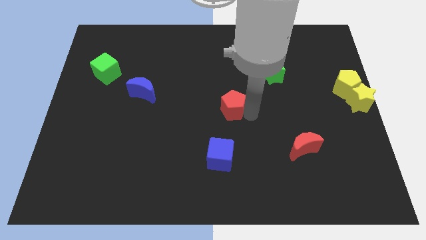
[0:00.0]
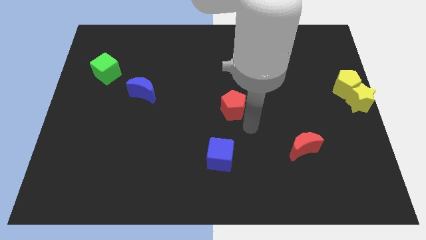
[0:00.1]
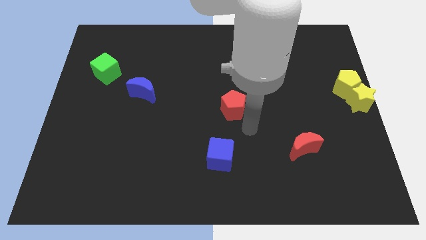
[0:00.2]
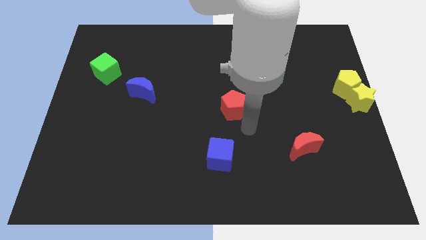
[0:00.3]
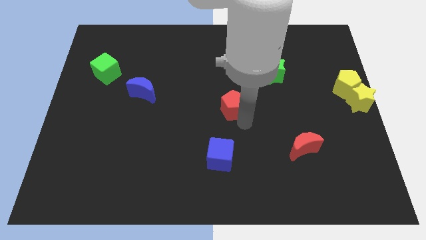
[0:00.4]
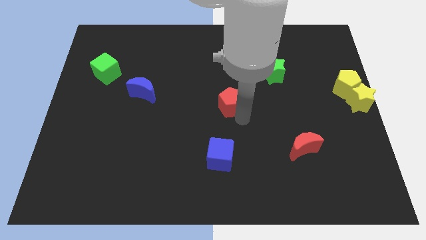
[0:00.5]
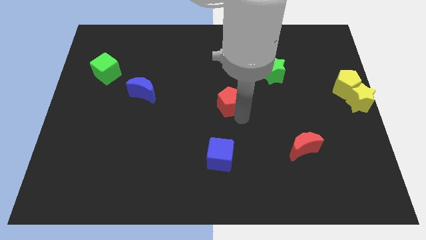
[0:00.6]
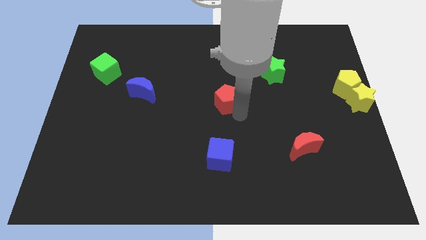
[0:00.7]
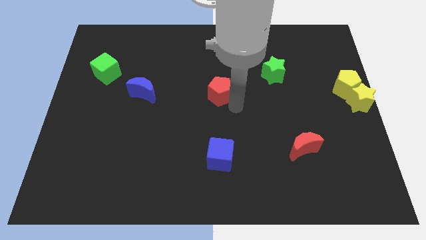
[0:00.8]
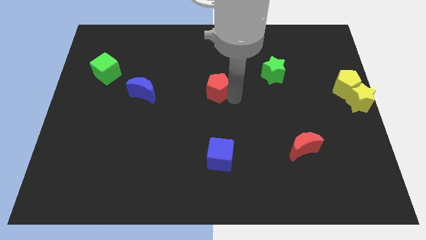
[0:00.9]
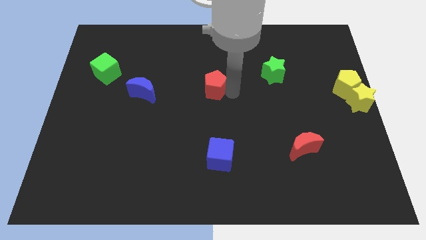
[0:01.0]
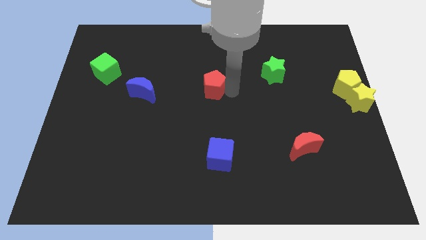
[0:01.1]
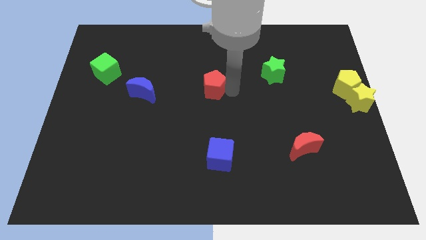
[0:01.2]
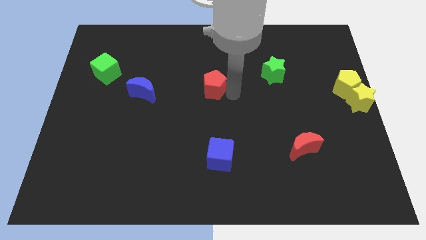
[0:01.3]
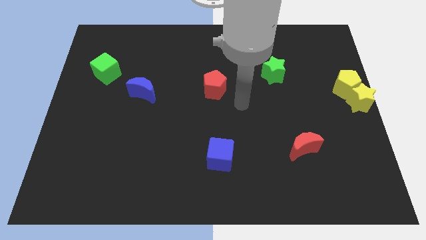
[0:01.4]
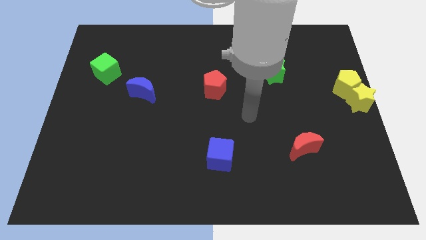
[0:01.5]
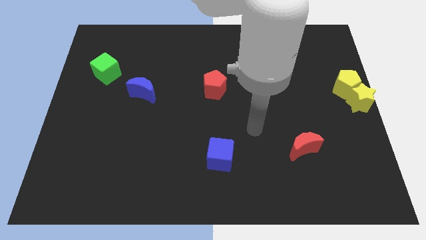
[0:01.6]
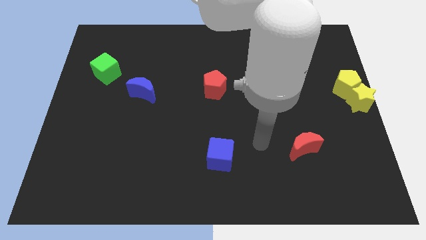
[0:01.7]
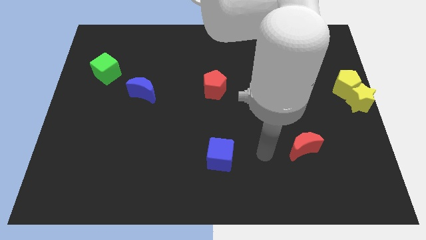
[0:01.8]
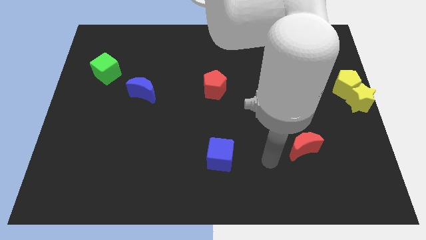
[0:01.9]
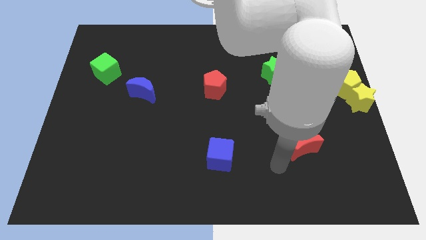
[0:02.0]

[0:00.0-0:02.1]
drag red pentagon to the right of blue moon

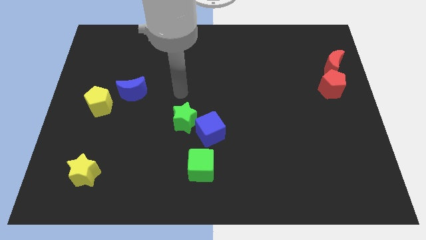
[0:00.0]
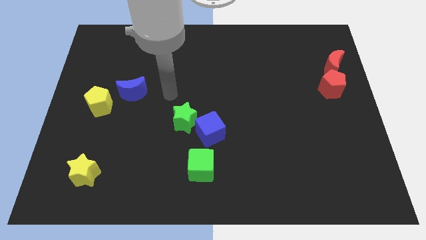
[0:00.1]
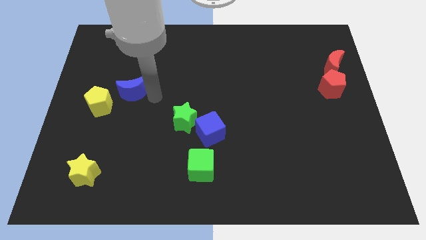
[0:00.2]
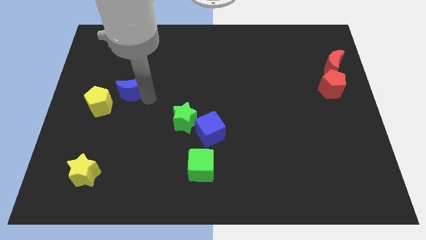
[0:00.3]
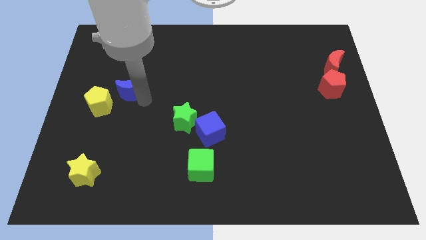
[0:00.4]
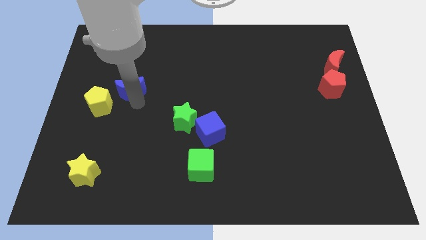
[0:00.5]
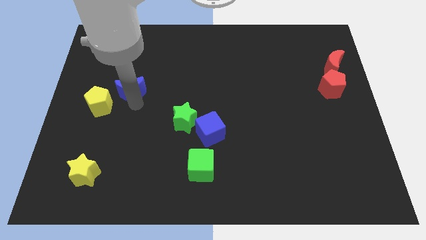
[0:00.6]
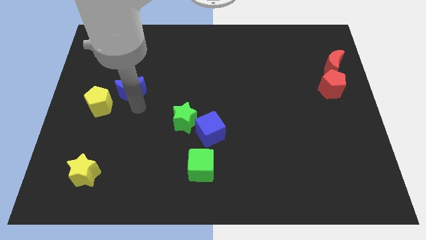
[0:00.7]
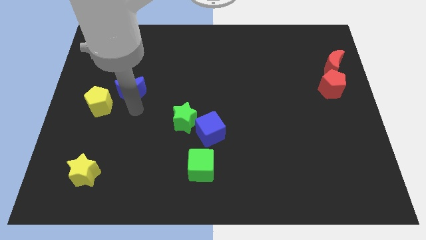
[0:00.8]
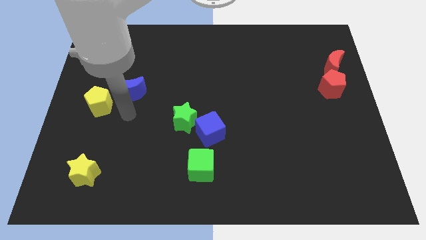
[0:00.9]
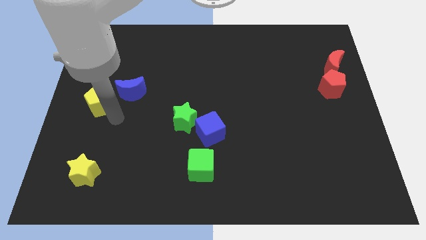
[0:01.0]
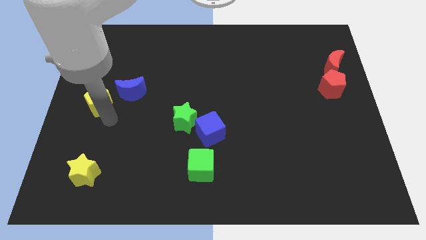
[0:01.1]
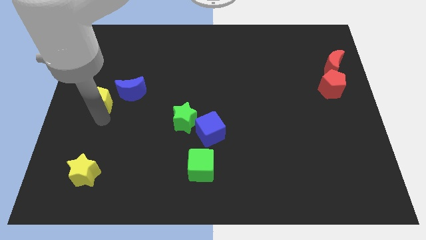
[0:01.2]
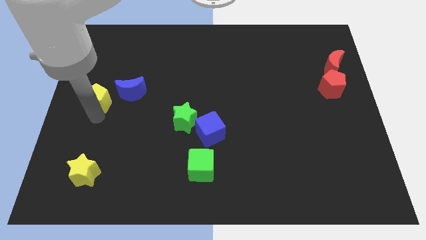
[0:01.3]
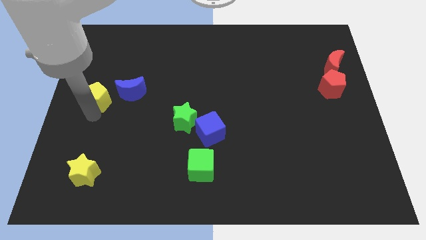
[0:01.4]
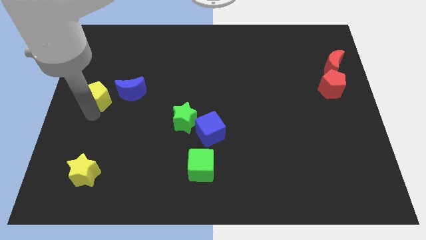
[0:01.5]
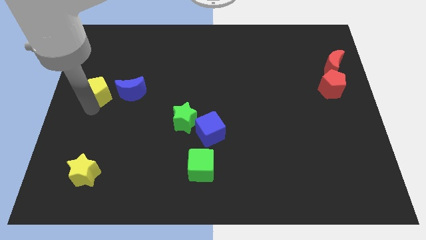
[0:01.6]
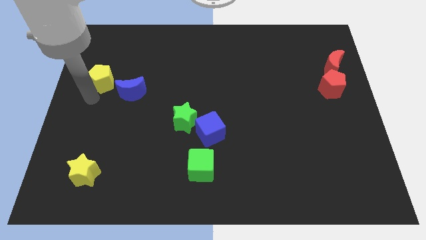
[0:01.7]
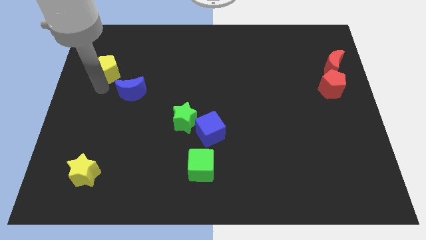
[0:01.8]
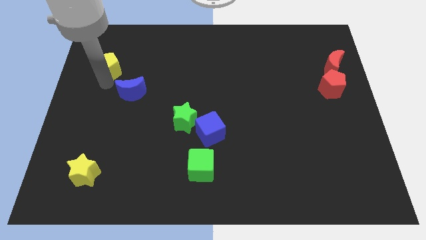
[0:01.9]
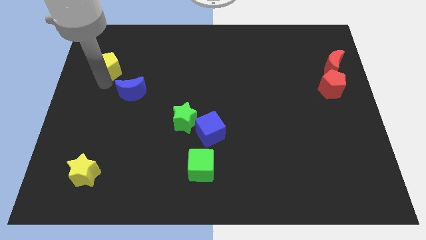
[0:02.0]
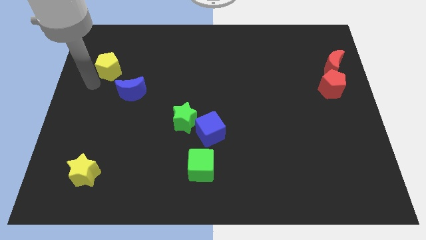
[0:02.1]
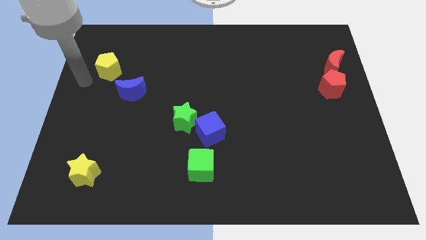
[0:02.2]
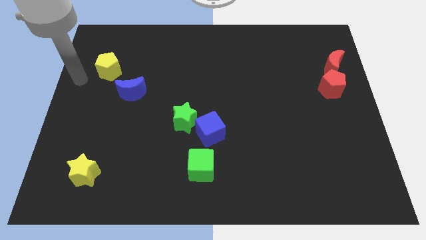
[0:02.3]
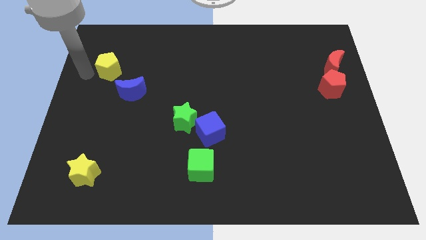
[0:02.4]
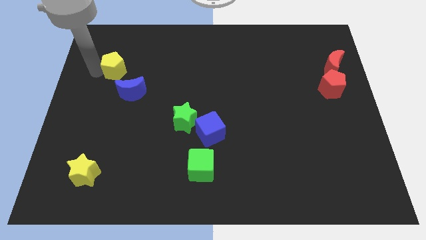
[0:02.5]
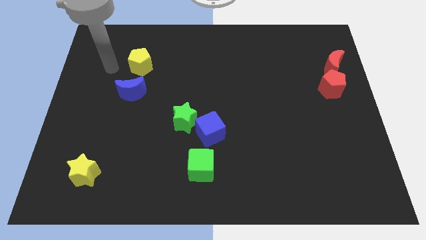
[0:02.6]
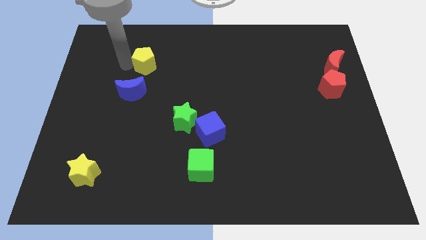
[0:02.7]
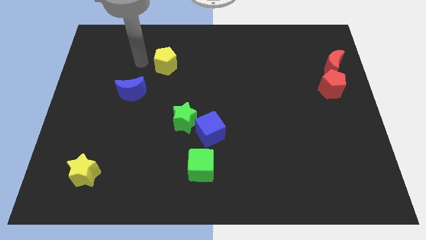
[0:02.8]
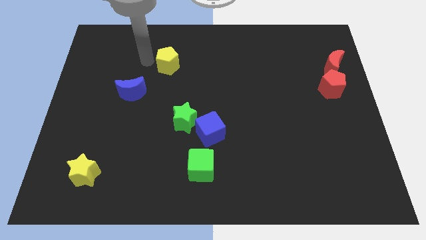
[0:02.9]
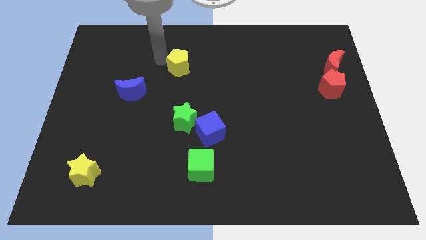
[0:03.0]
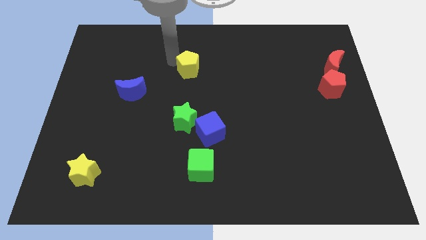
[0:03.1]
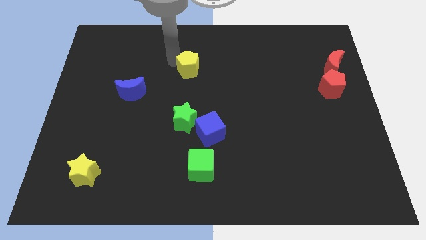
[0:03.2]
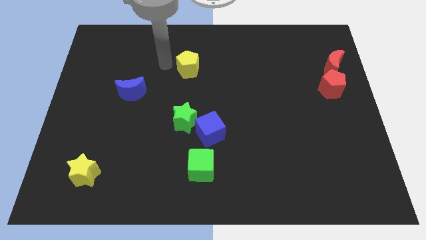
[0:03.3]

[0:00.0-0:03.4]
move yellow pentagon above the green star

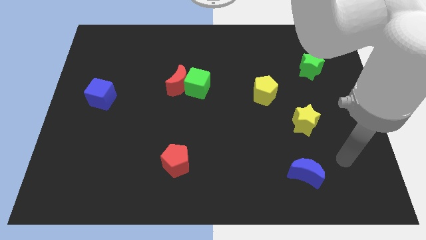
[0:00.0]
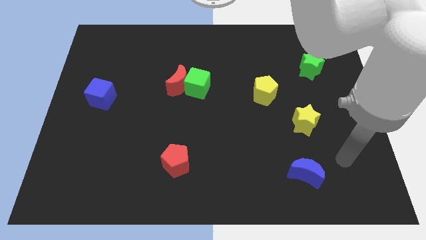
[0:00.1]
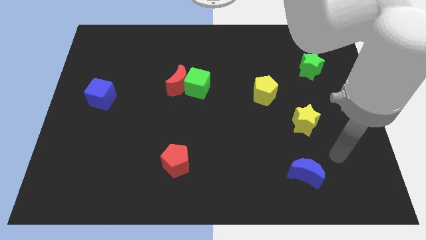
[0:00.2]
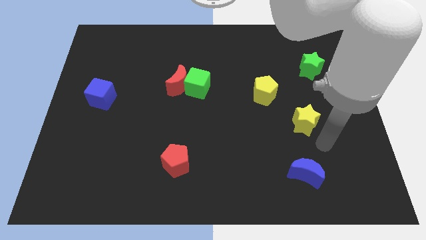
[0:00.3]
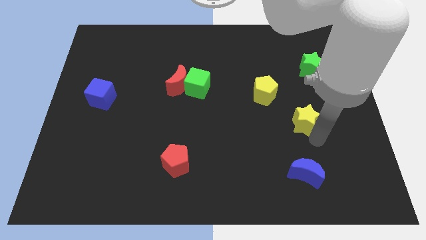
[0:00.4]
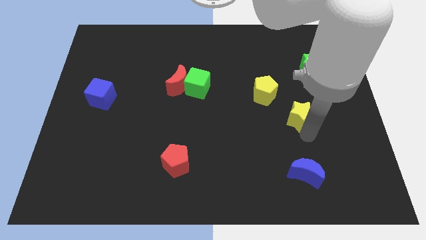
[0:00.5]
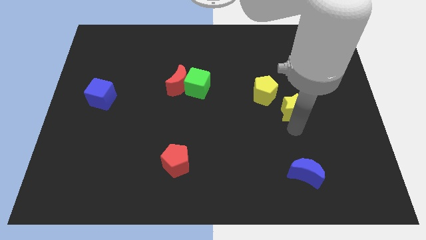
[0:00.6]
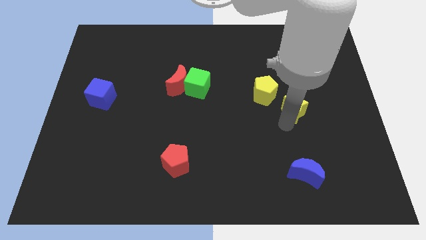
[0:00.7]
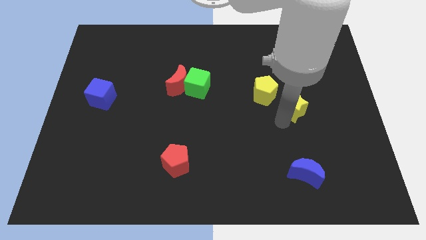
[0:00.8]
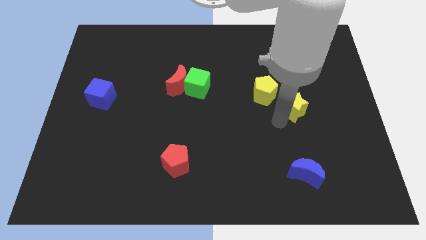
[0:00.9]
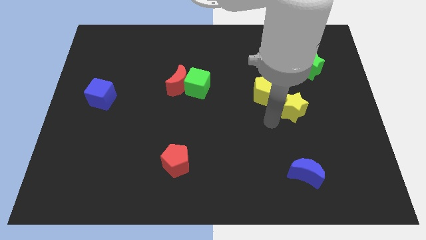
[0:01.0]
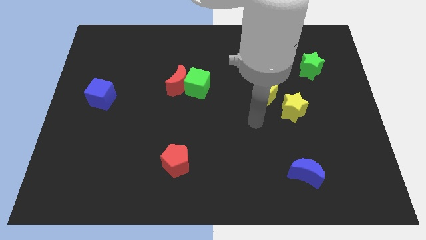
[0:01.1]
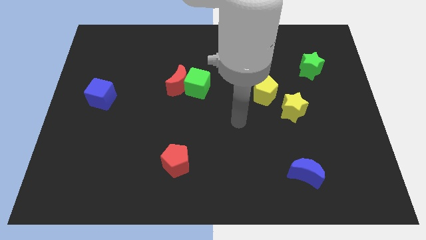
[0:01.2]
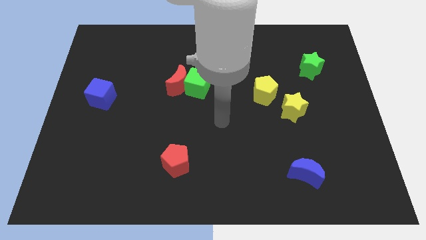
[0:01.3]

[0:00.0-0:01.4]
push the yellow star close to the yellow pentagon

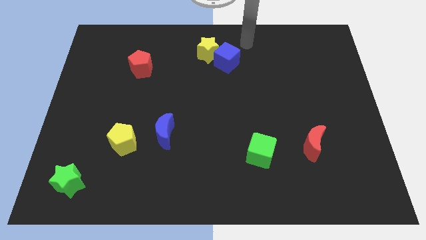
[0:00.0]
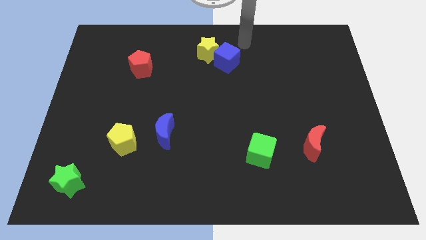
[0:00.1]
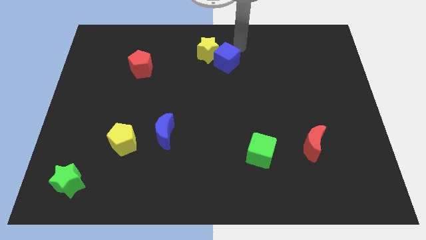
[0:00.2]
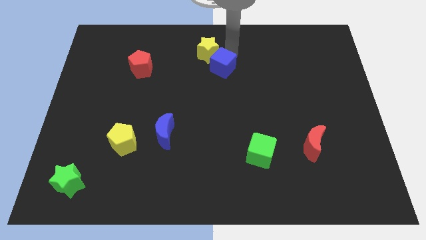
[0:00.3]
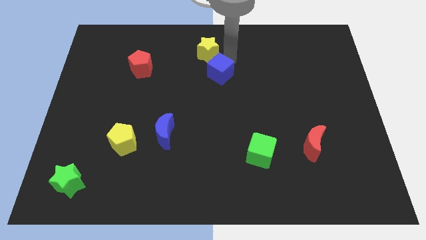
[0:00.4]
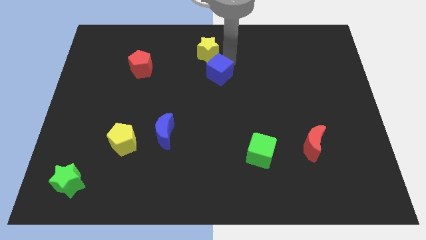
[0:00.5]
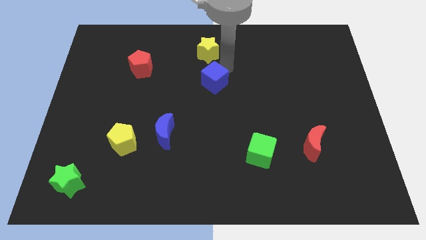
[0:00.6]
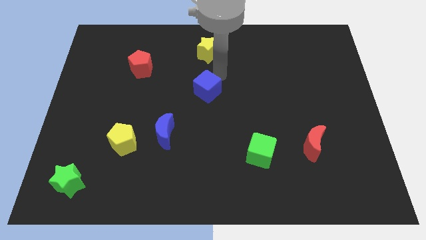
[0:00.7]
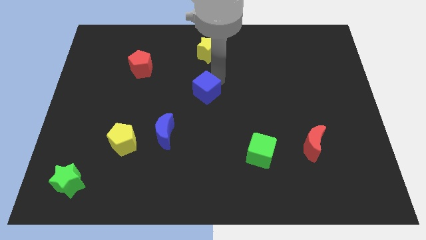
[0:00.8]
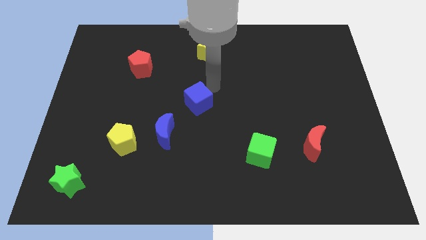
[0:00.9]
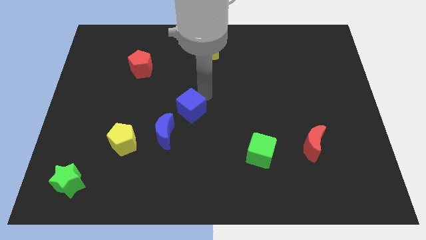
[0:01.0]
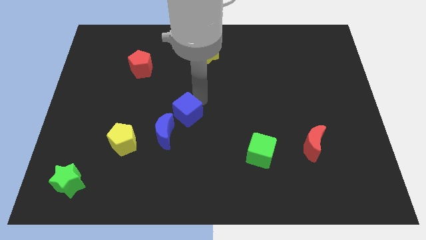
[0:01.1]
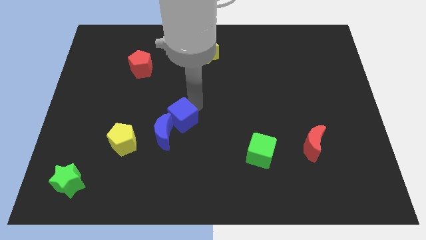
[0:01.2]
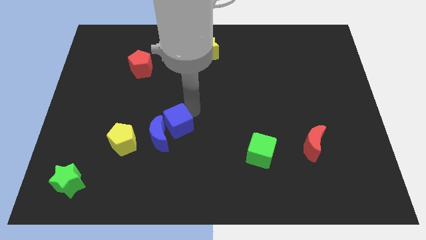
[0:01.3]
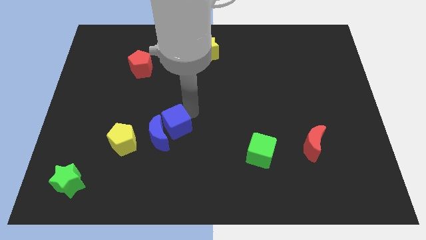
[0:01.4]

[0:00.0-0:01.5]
push the blue cube into the blue crescent

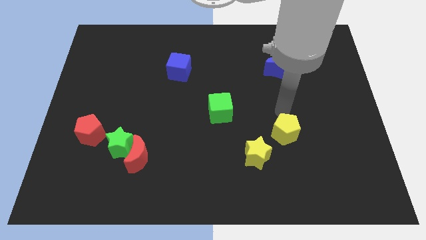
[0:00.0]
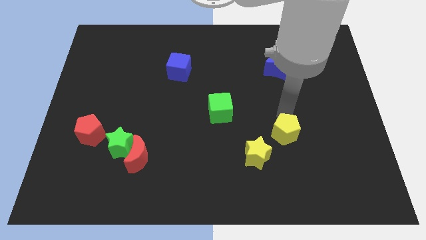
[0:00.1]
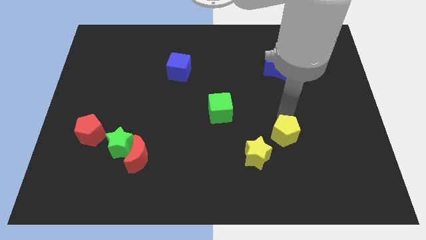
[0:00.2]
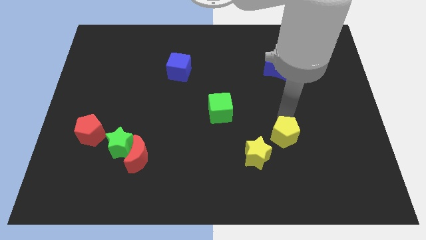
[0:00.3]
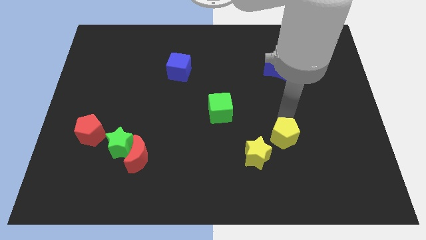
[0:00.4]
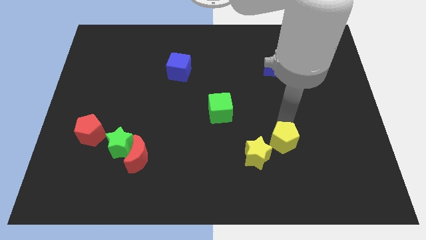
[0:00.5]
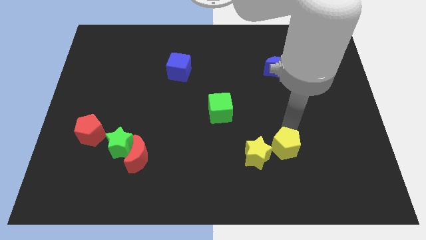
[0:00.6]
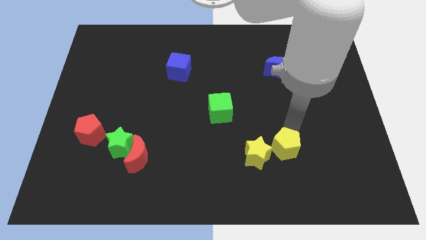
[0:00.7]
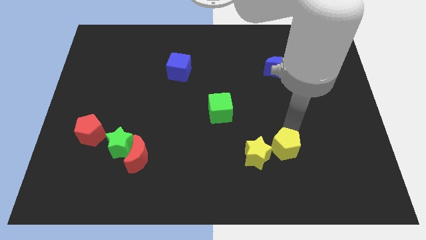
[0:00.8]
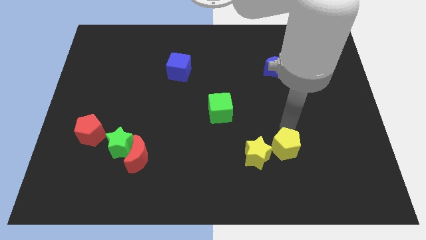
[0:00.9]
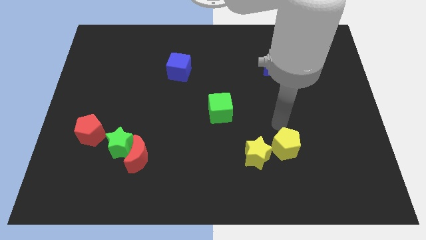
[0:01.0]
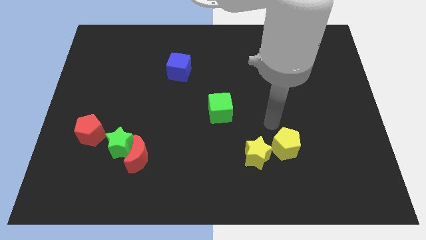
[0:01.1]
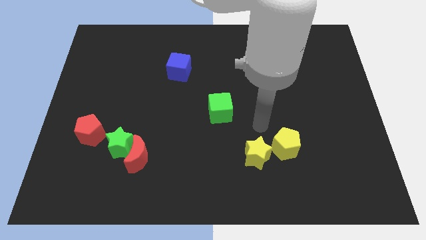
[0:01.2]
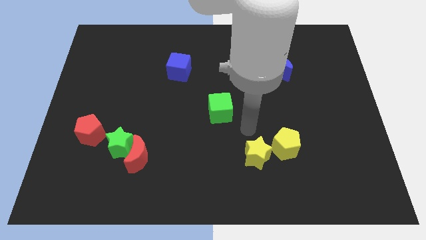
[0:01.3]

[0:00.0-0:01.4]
move the yellow pentagon to the right side of the yellow star
